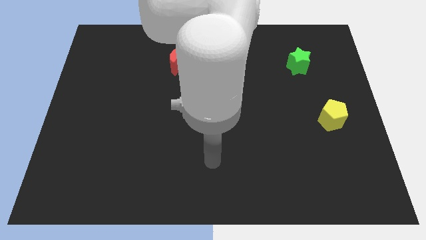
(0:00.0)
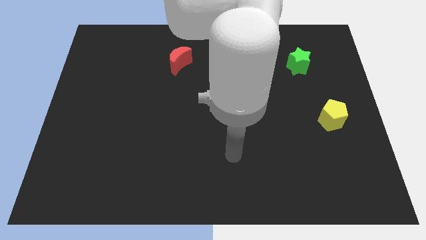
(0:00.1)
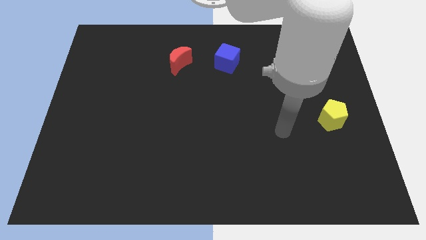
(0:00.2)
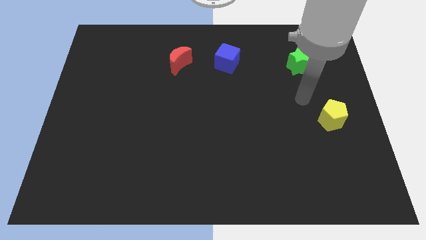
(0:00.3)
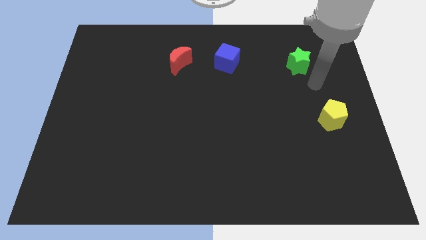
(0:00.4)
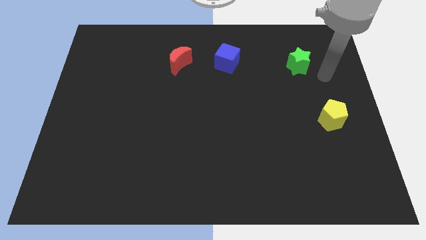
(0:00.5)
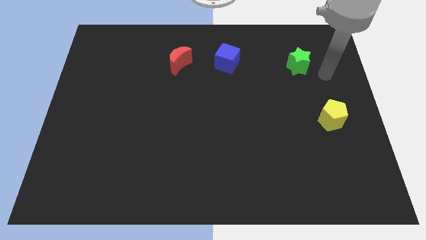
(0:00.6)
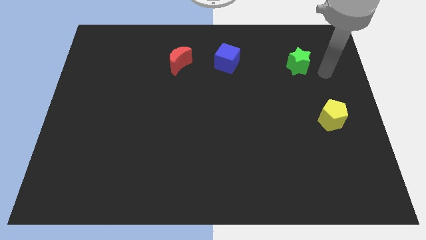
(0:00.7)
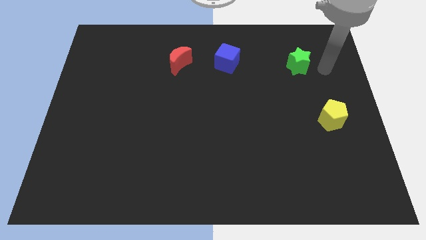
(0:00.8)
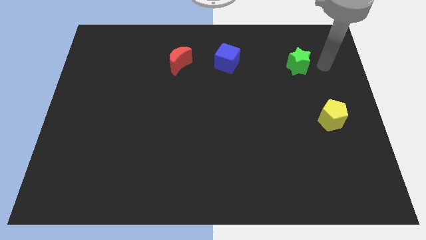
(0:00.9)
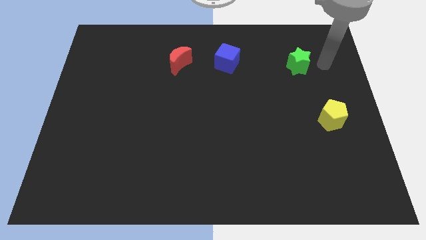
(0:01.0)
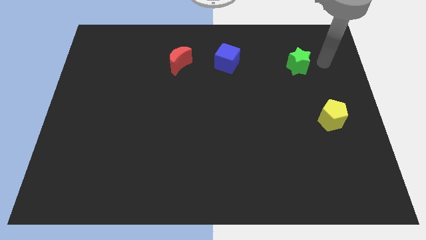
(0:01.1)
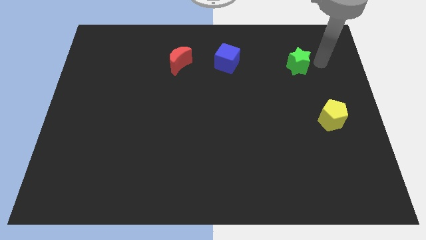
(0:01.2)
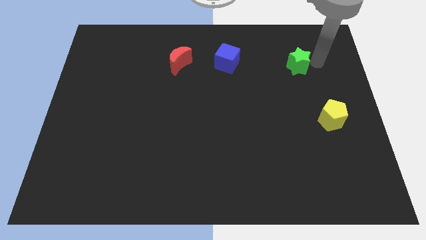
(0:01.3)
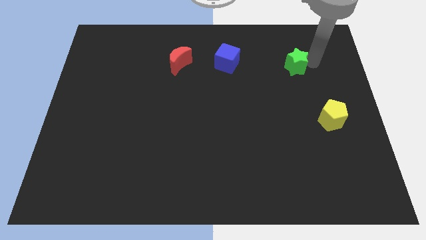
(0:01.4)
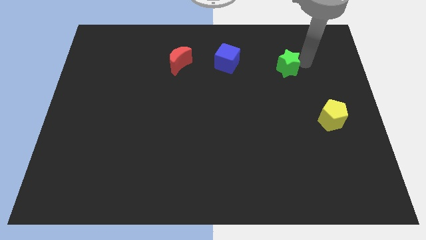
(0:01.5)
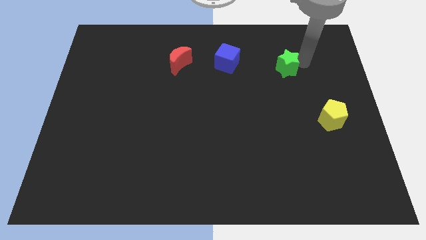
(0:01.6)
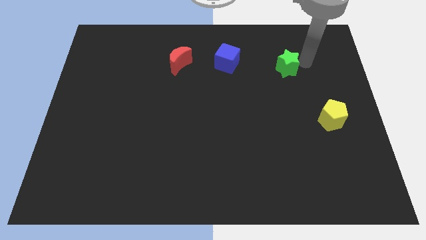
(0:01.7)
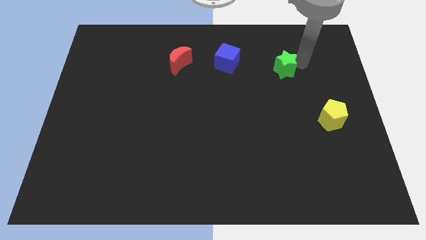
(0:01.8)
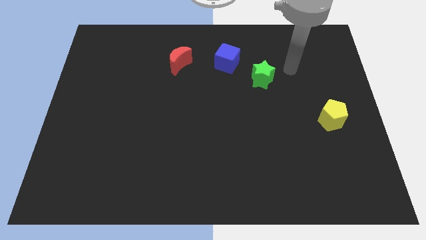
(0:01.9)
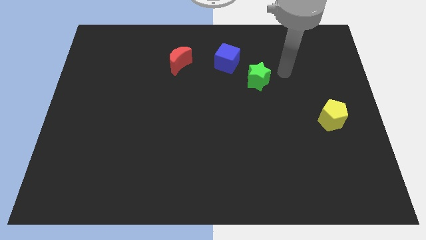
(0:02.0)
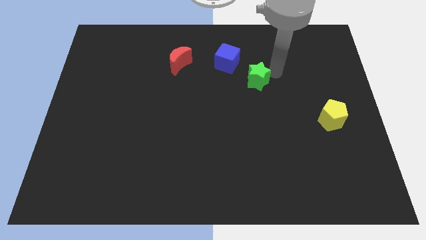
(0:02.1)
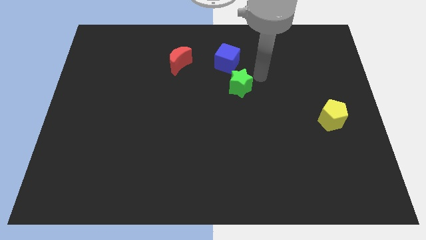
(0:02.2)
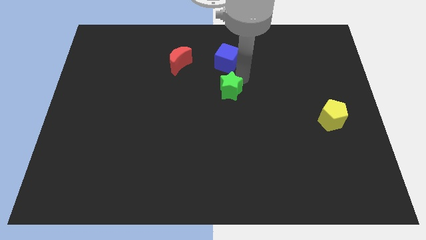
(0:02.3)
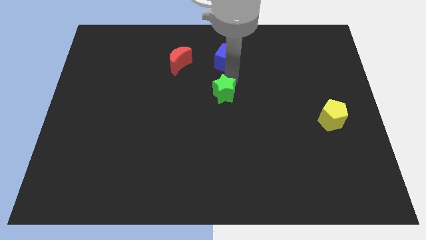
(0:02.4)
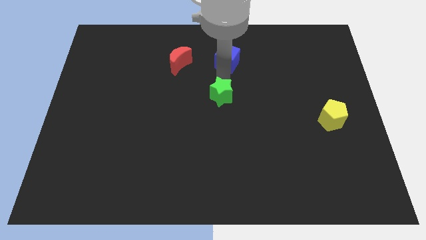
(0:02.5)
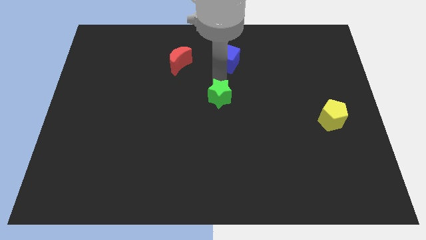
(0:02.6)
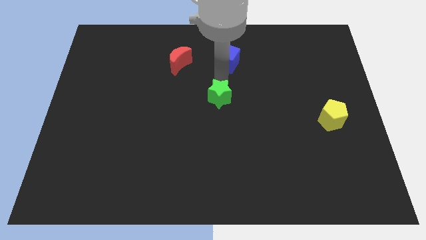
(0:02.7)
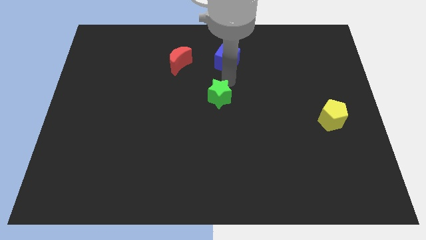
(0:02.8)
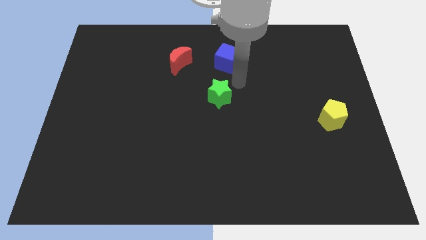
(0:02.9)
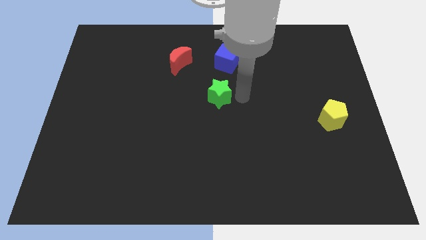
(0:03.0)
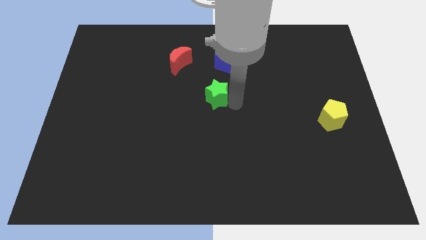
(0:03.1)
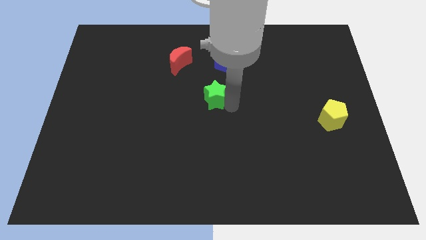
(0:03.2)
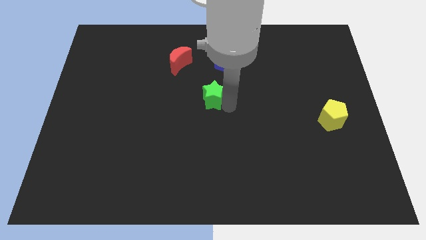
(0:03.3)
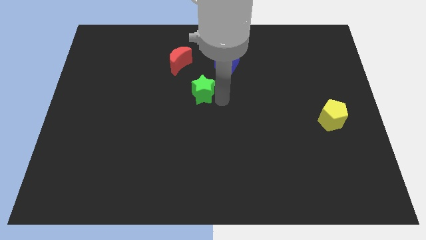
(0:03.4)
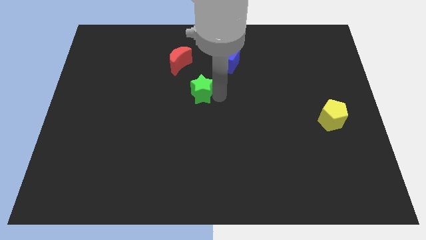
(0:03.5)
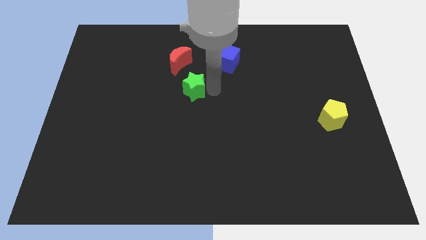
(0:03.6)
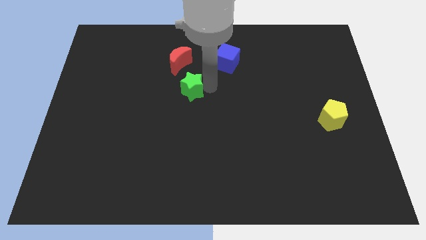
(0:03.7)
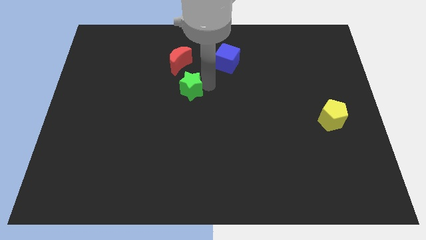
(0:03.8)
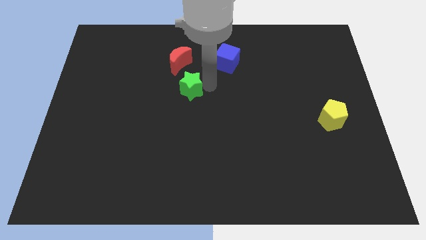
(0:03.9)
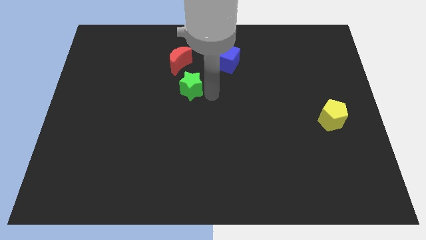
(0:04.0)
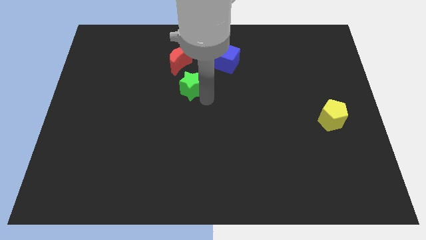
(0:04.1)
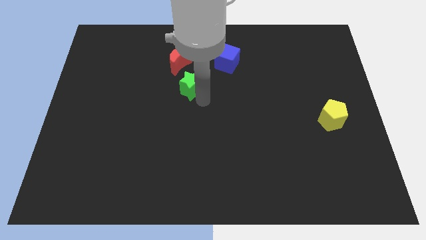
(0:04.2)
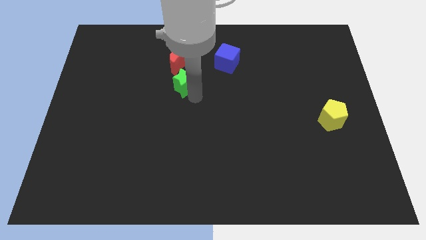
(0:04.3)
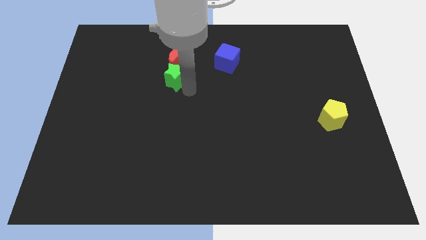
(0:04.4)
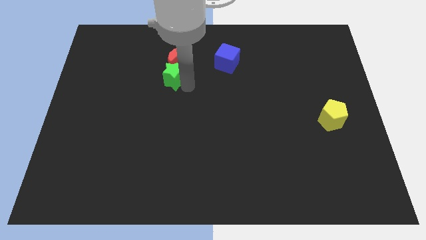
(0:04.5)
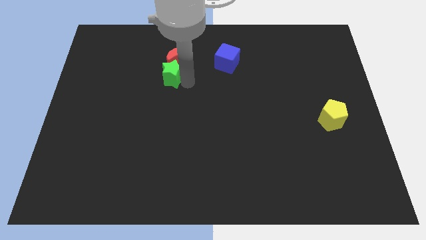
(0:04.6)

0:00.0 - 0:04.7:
slide the green block to the moon

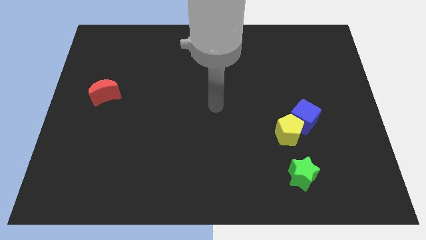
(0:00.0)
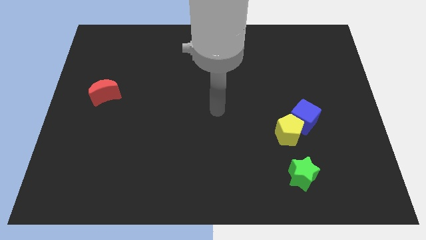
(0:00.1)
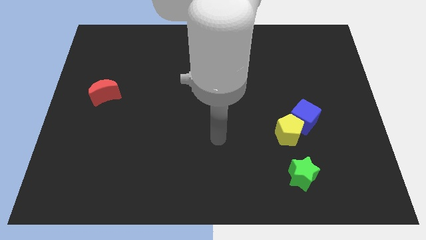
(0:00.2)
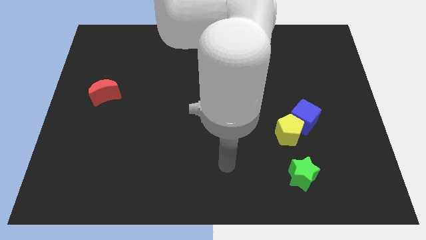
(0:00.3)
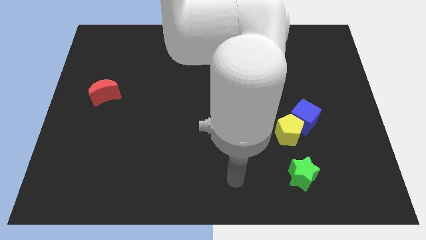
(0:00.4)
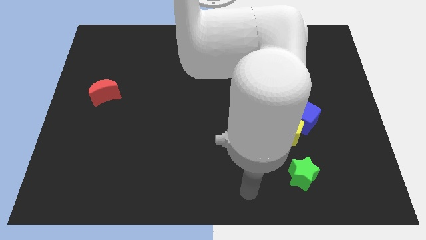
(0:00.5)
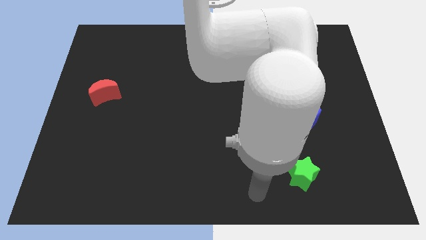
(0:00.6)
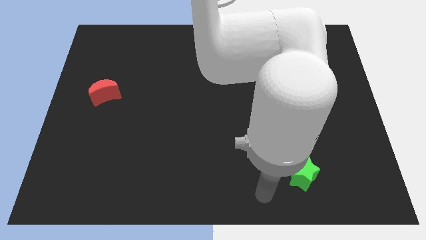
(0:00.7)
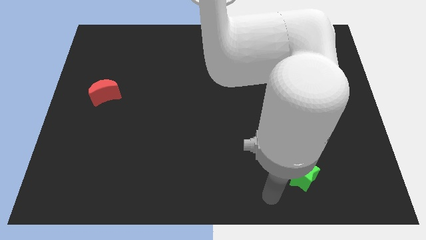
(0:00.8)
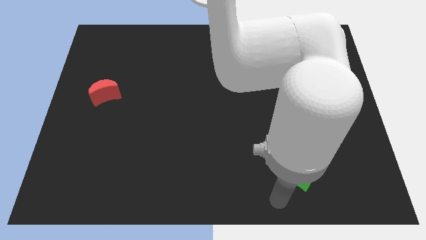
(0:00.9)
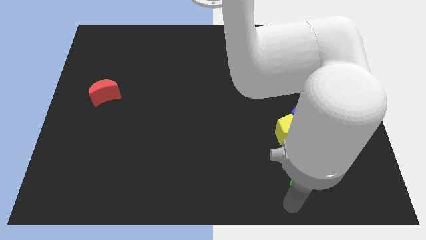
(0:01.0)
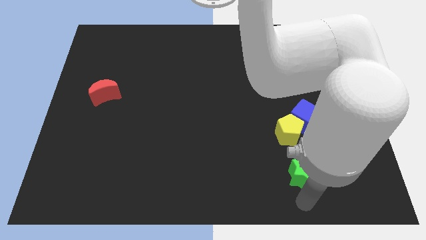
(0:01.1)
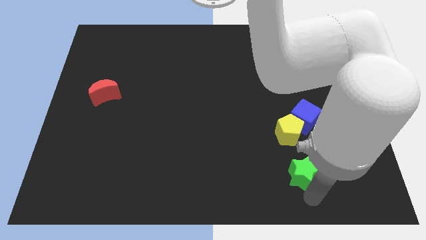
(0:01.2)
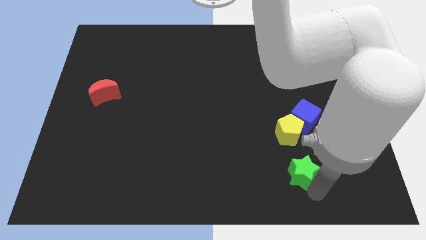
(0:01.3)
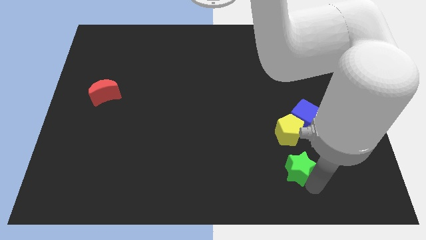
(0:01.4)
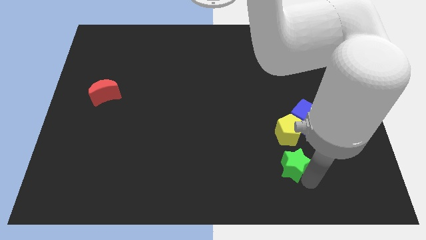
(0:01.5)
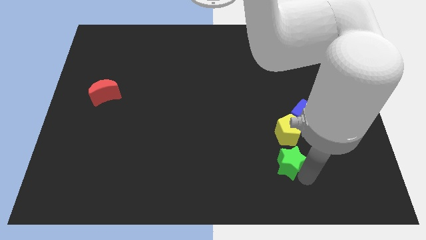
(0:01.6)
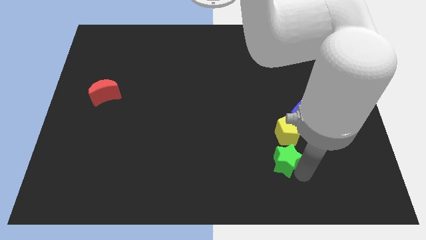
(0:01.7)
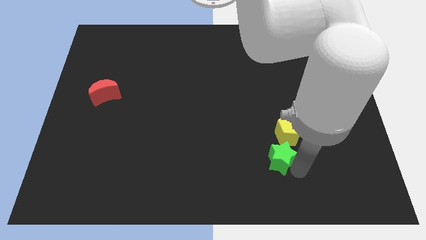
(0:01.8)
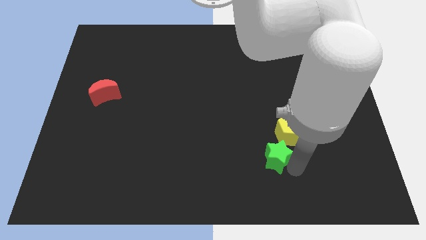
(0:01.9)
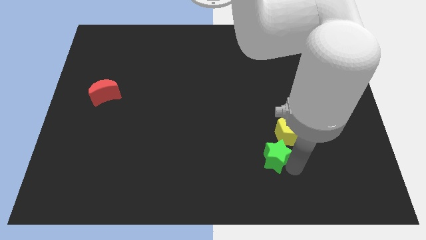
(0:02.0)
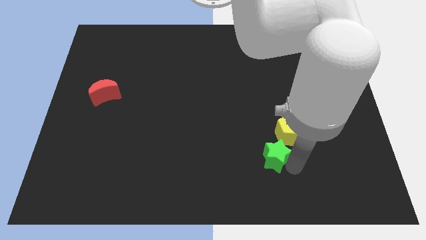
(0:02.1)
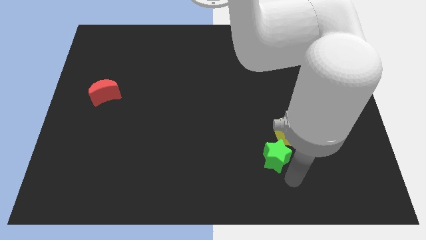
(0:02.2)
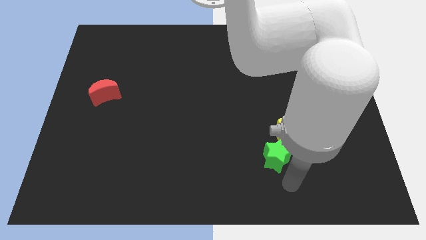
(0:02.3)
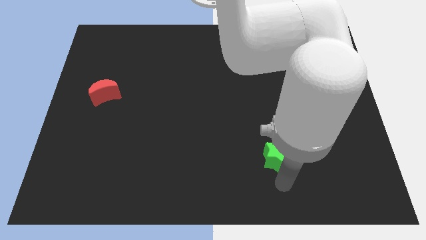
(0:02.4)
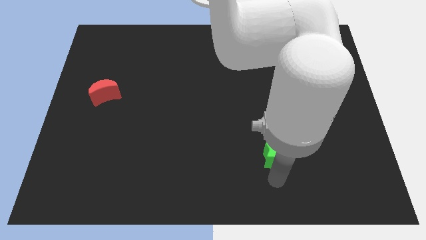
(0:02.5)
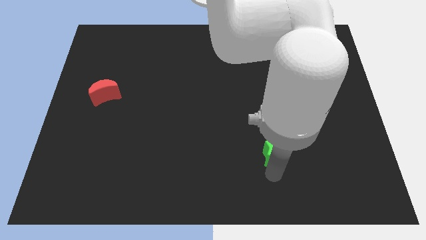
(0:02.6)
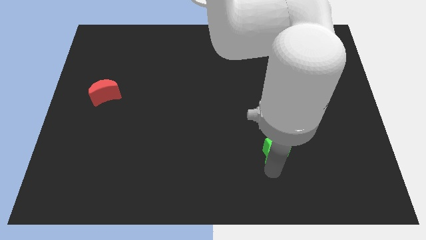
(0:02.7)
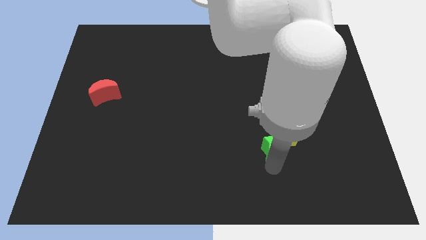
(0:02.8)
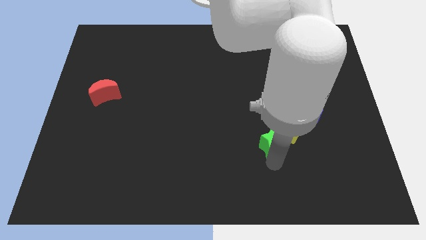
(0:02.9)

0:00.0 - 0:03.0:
slide the green star towards the yellow pentagon

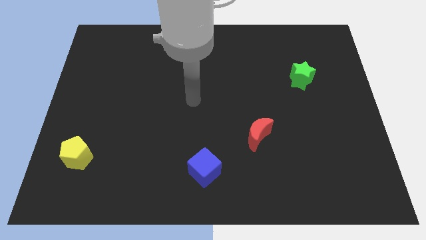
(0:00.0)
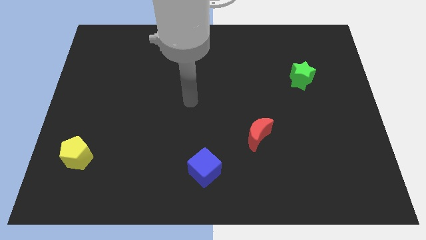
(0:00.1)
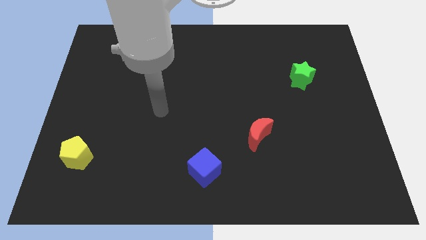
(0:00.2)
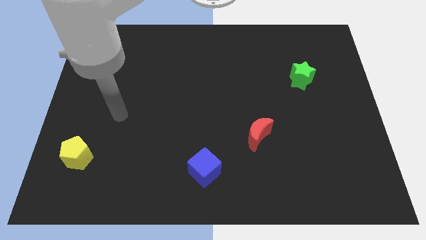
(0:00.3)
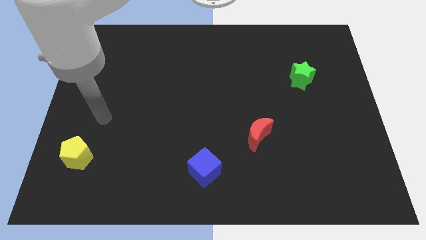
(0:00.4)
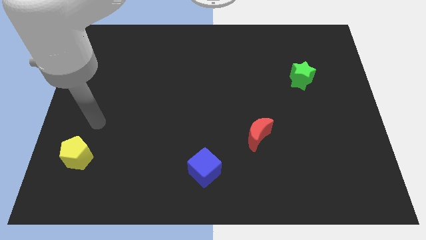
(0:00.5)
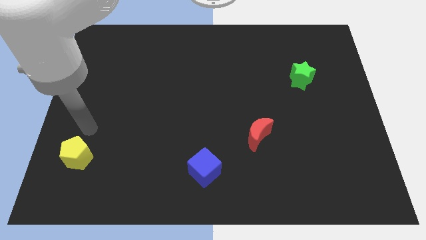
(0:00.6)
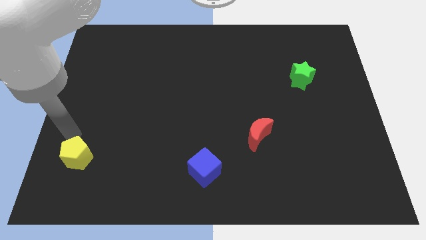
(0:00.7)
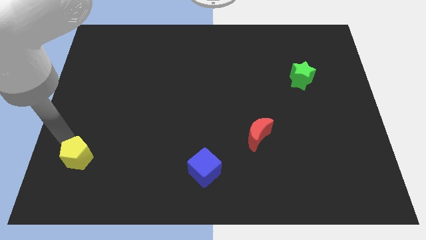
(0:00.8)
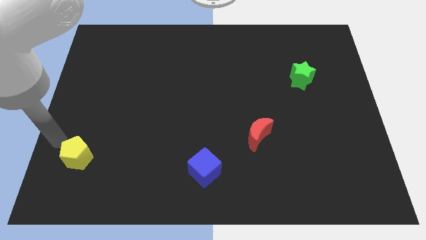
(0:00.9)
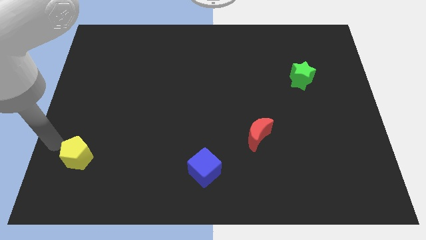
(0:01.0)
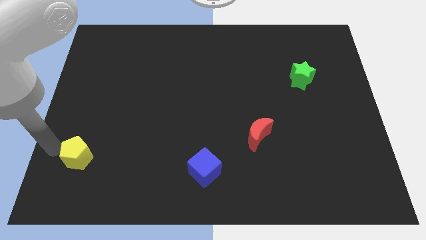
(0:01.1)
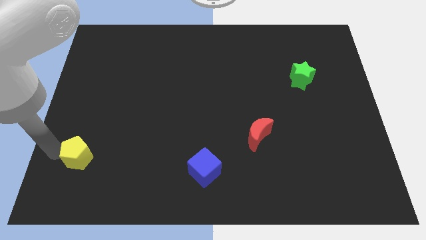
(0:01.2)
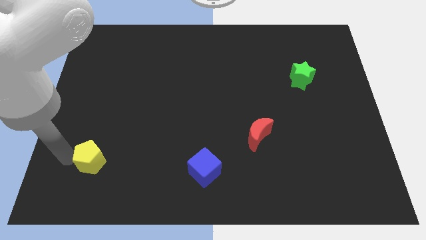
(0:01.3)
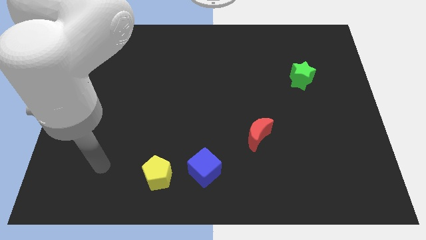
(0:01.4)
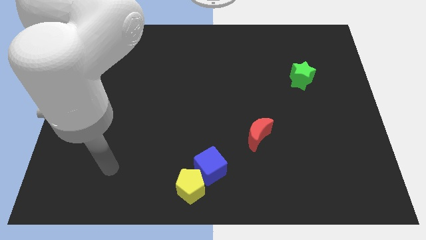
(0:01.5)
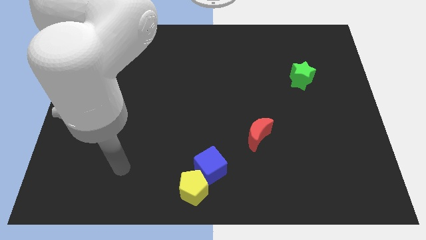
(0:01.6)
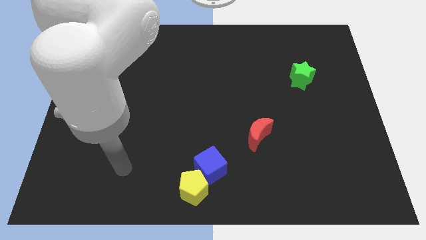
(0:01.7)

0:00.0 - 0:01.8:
move the yellow pentagon towards the blue block
